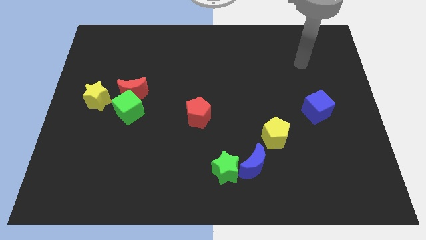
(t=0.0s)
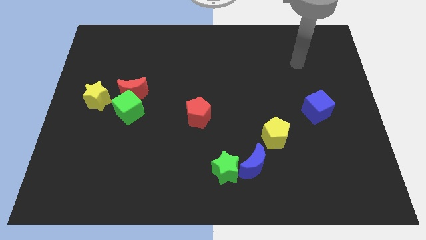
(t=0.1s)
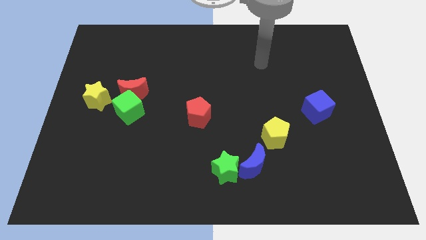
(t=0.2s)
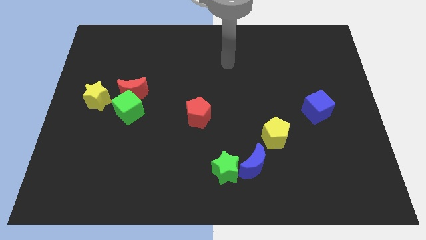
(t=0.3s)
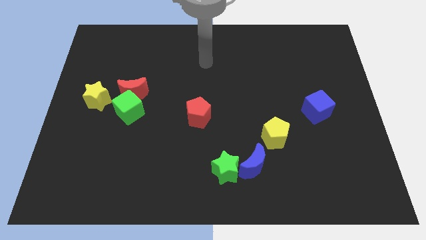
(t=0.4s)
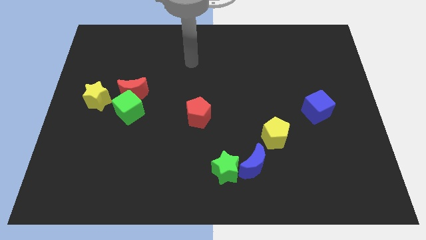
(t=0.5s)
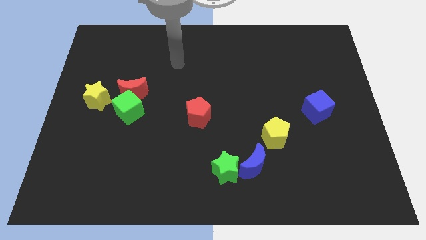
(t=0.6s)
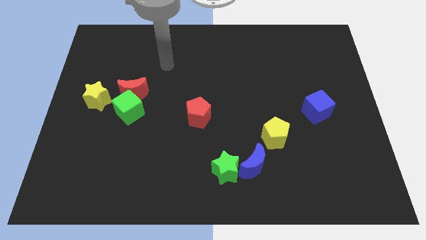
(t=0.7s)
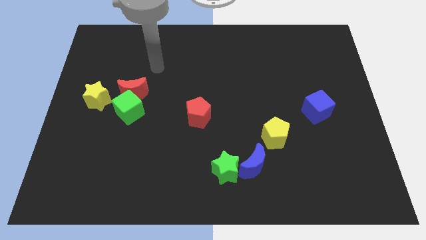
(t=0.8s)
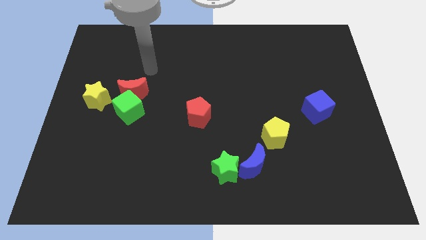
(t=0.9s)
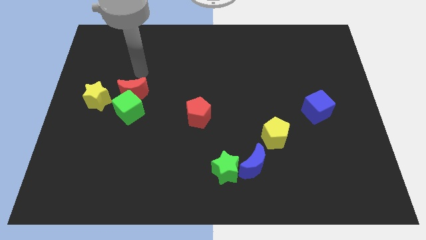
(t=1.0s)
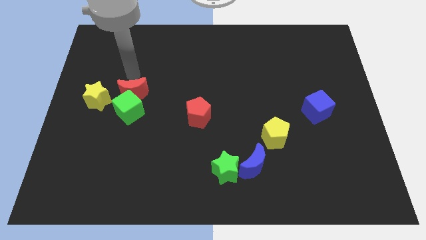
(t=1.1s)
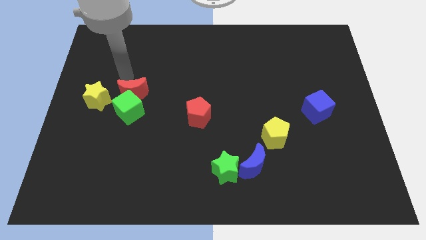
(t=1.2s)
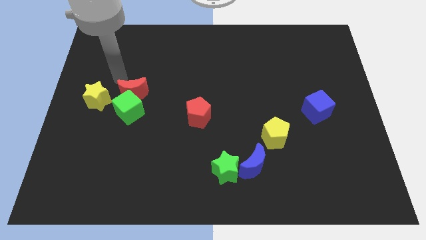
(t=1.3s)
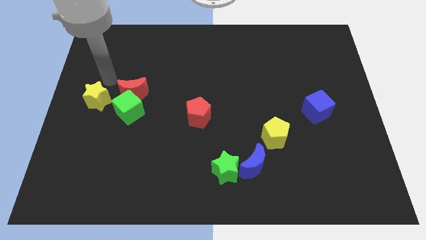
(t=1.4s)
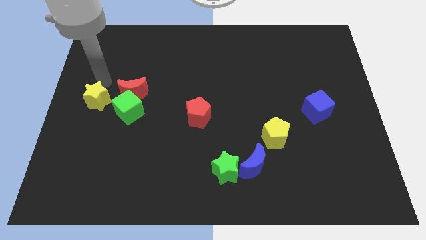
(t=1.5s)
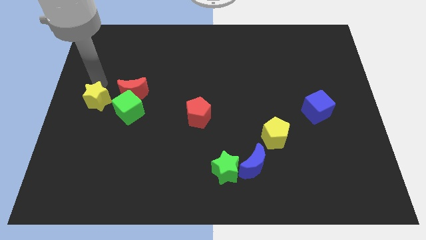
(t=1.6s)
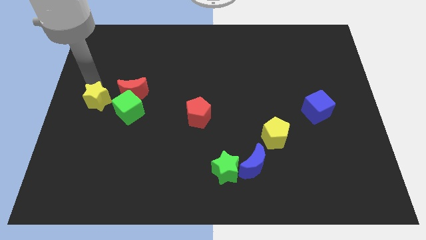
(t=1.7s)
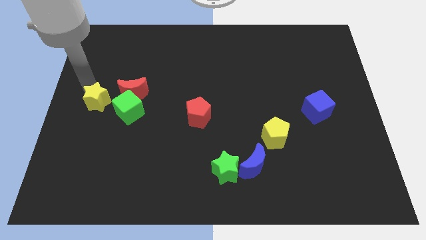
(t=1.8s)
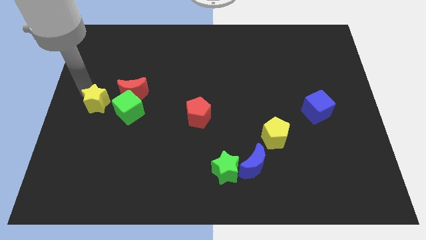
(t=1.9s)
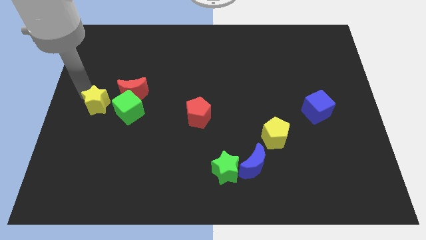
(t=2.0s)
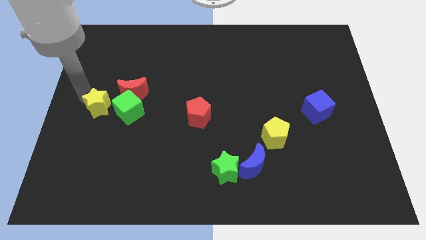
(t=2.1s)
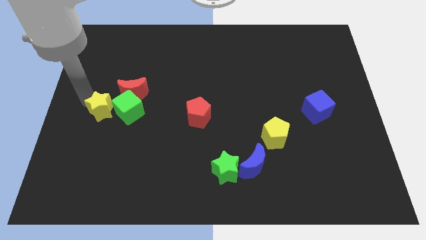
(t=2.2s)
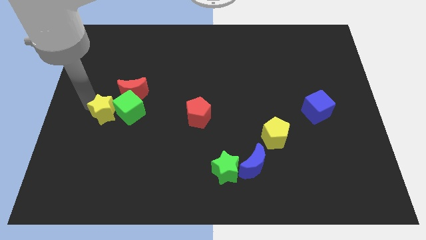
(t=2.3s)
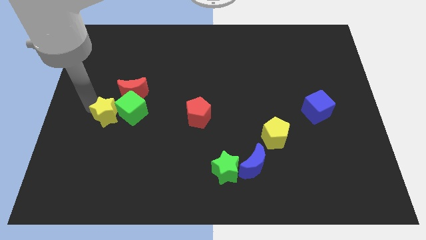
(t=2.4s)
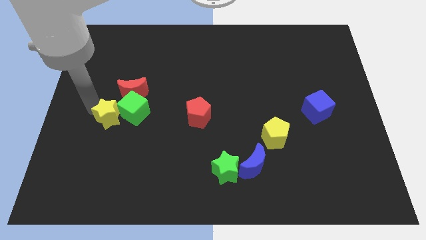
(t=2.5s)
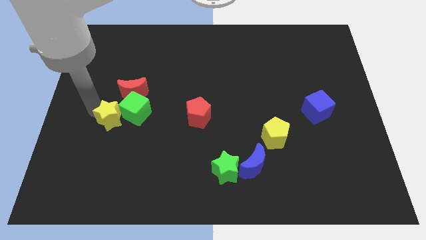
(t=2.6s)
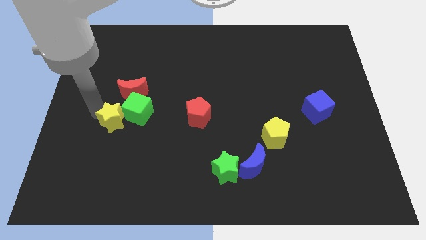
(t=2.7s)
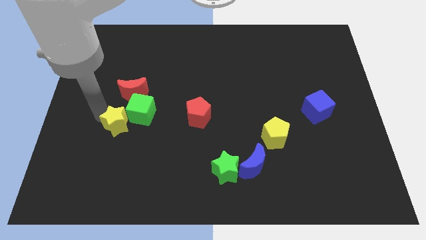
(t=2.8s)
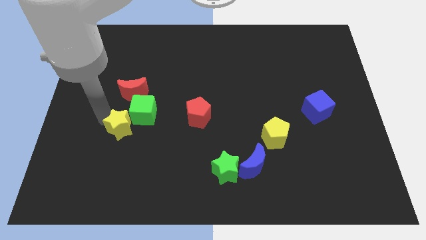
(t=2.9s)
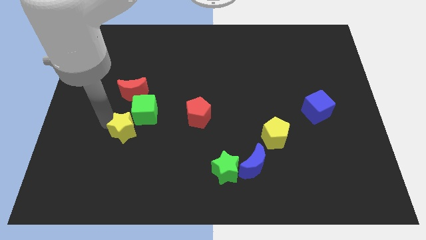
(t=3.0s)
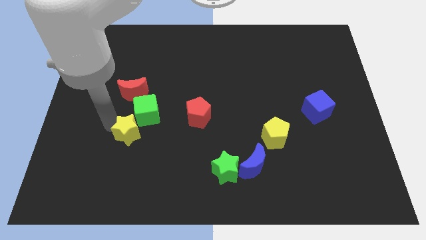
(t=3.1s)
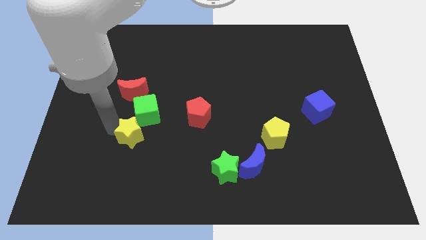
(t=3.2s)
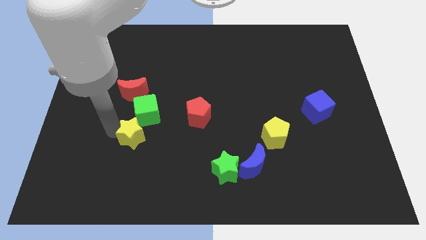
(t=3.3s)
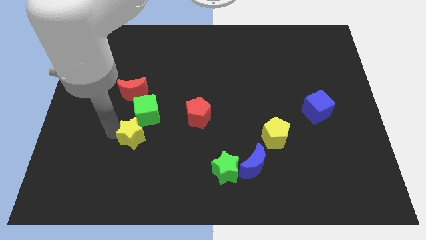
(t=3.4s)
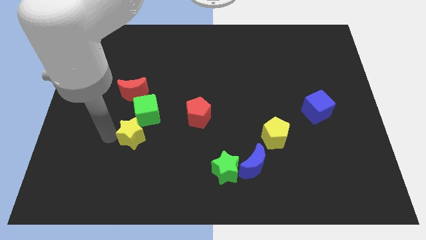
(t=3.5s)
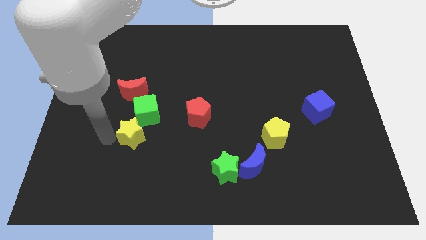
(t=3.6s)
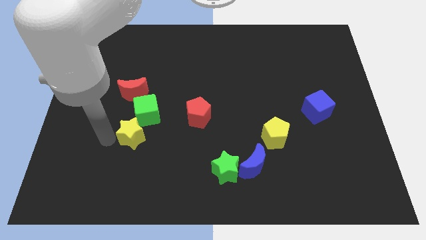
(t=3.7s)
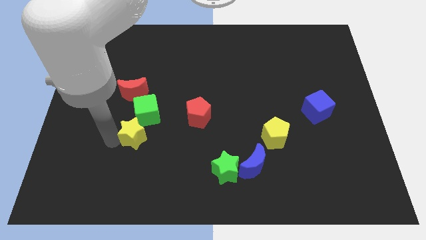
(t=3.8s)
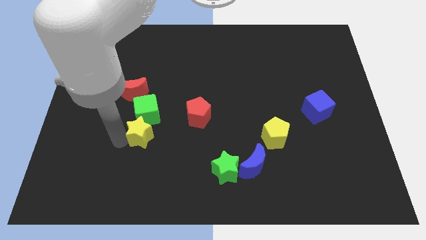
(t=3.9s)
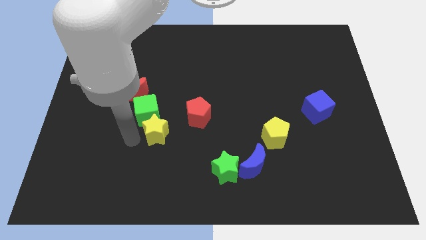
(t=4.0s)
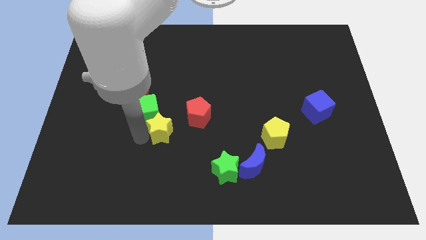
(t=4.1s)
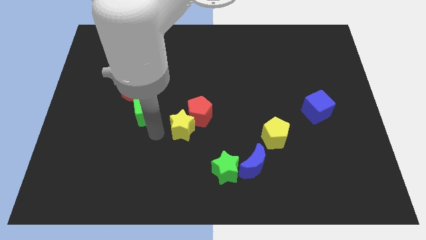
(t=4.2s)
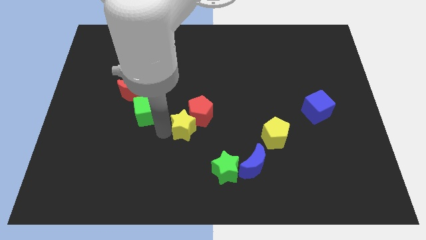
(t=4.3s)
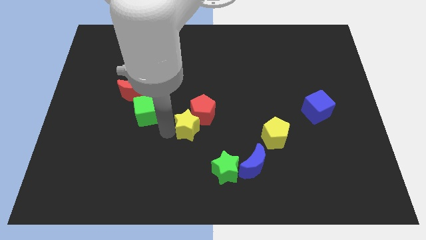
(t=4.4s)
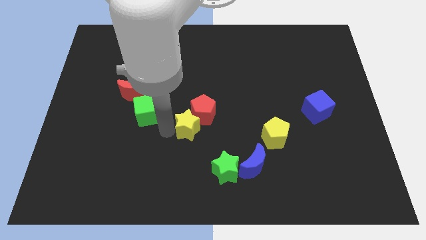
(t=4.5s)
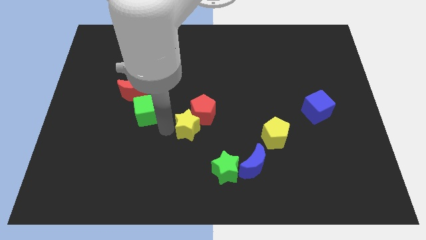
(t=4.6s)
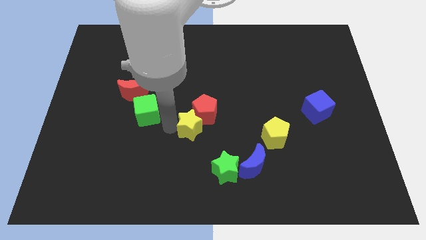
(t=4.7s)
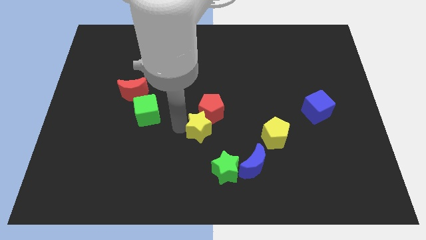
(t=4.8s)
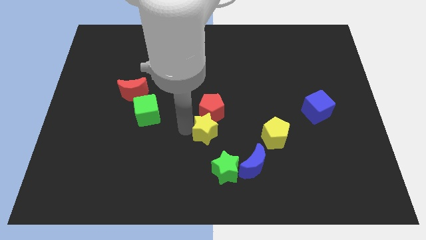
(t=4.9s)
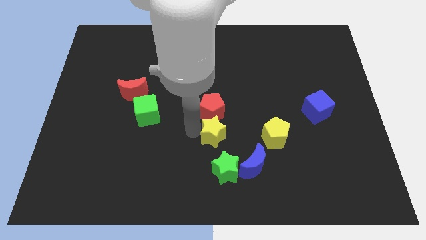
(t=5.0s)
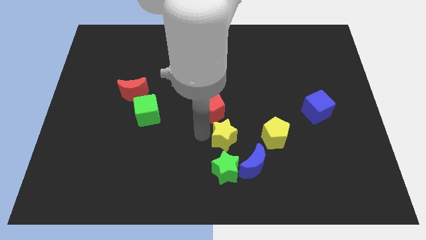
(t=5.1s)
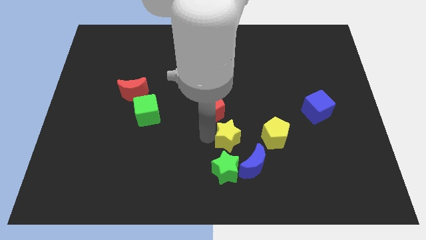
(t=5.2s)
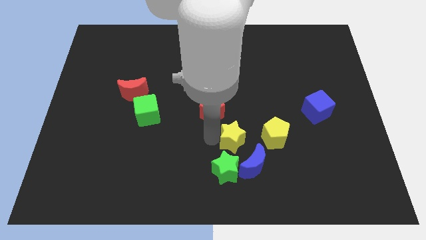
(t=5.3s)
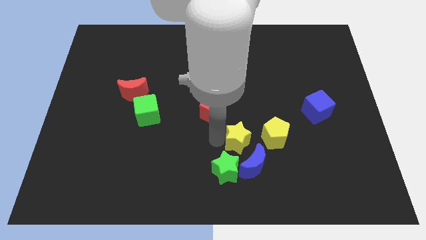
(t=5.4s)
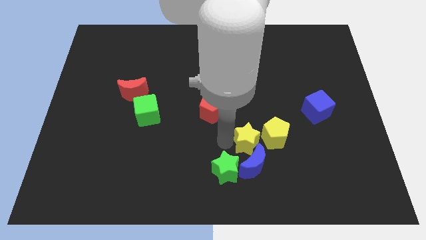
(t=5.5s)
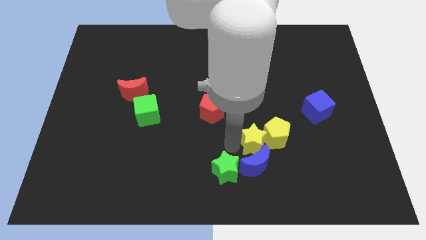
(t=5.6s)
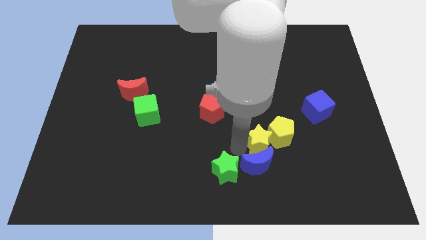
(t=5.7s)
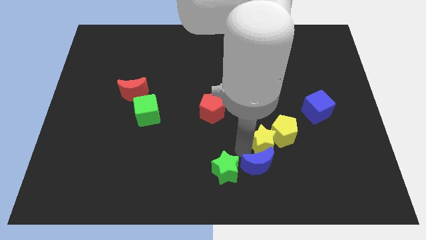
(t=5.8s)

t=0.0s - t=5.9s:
push the yellow star to the yellow pentagon

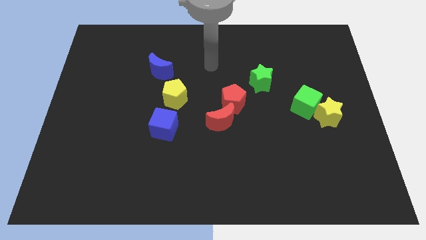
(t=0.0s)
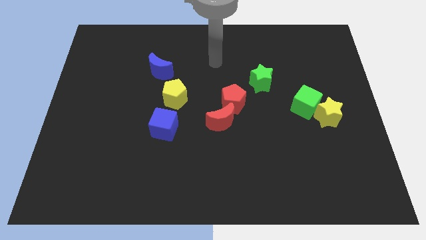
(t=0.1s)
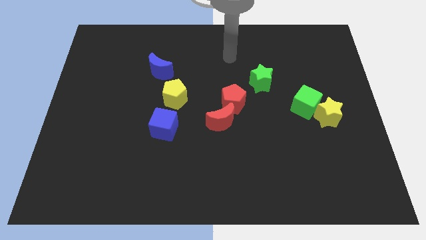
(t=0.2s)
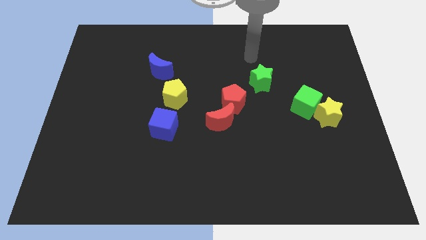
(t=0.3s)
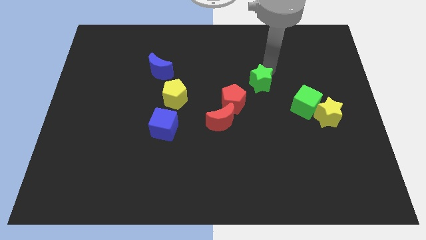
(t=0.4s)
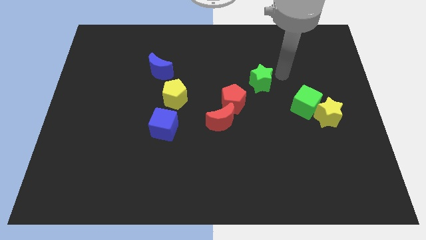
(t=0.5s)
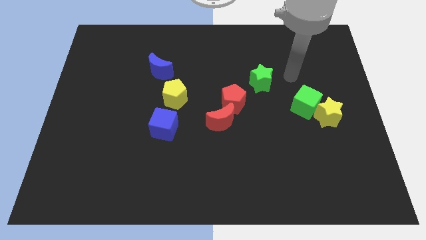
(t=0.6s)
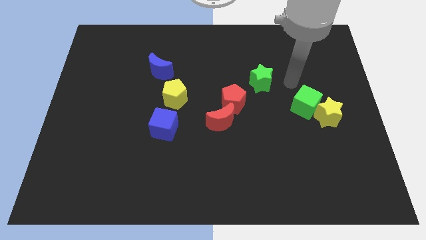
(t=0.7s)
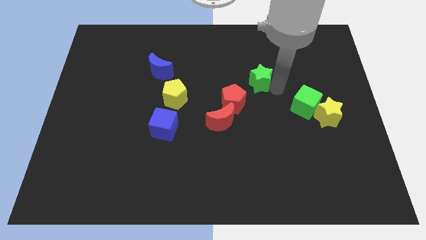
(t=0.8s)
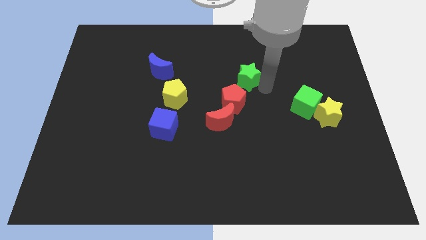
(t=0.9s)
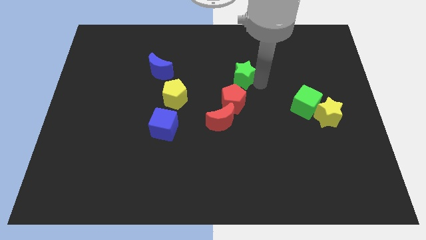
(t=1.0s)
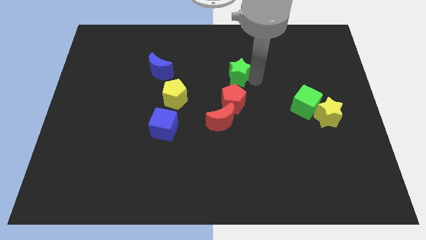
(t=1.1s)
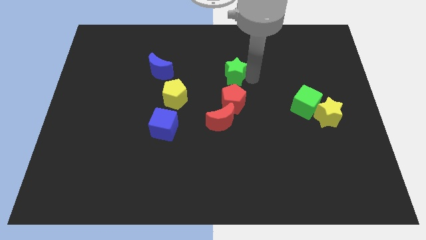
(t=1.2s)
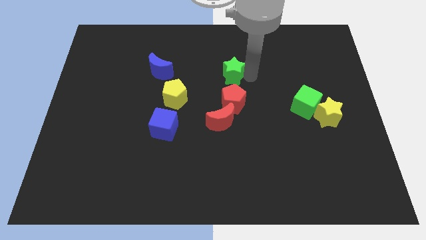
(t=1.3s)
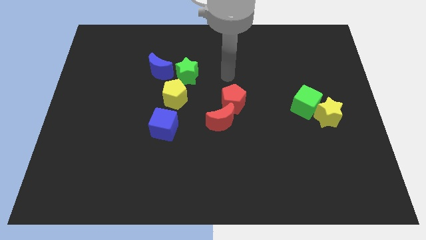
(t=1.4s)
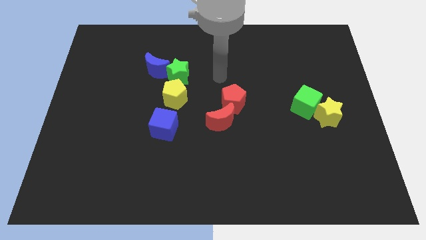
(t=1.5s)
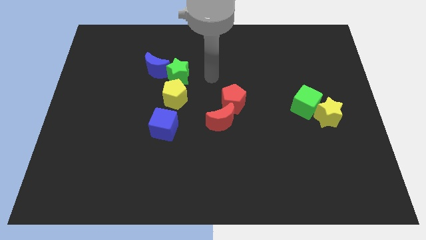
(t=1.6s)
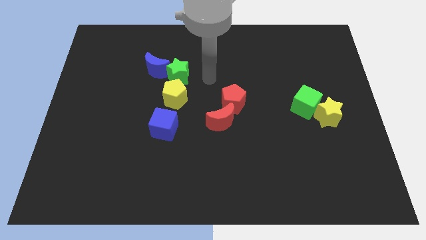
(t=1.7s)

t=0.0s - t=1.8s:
move the green star close to the blue moon

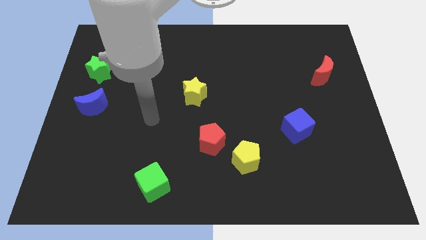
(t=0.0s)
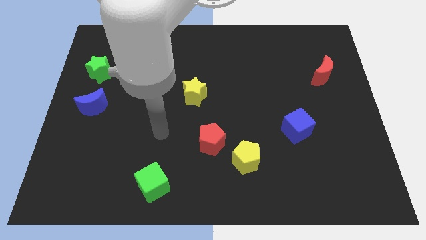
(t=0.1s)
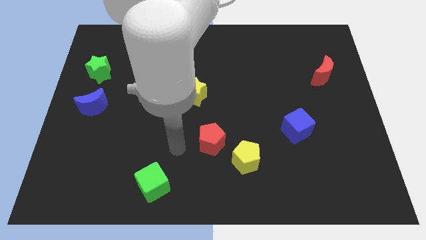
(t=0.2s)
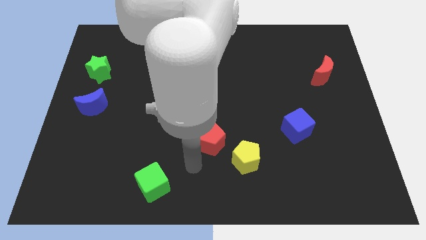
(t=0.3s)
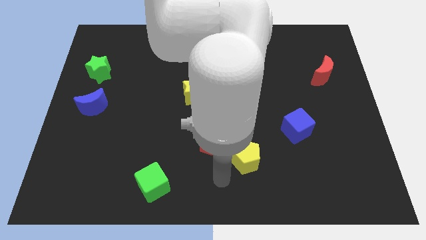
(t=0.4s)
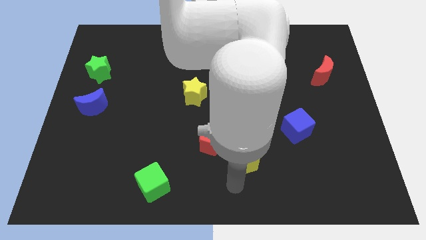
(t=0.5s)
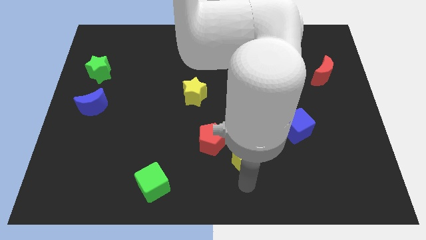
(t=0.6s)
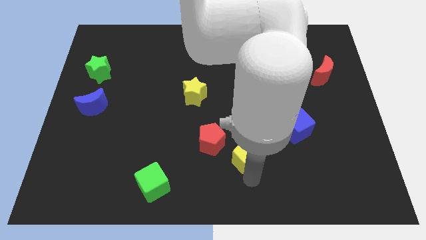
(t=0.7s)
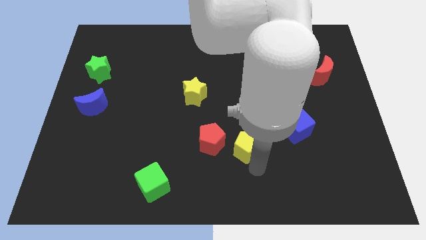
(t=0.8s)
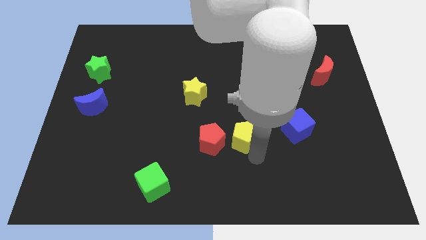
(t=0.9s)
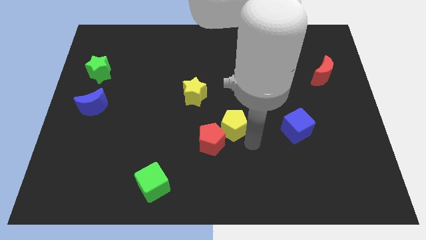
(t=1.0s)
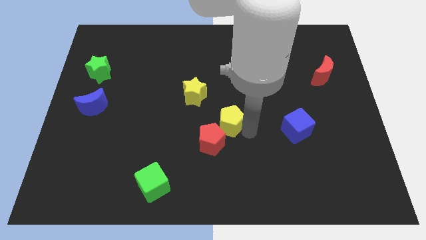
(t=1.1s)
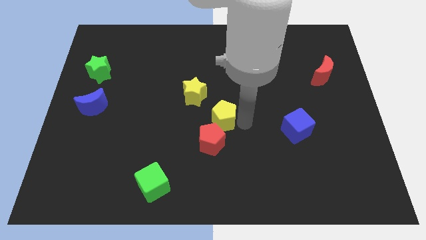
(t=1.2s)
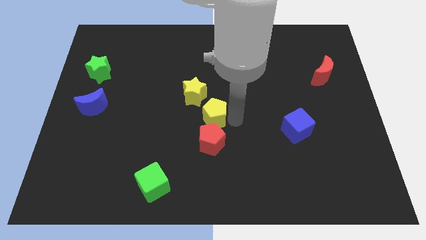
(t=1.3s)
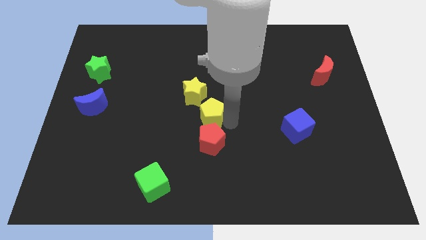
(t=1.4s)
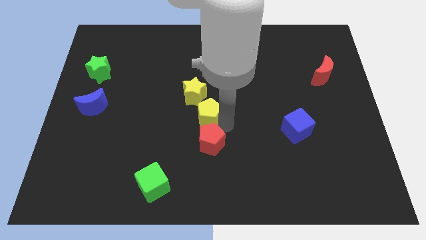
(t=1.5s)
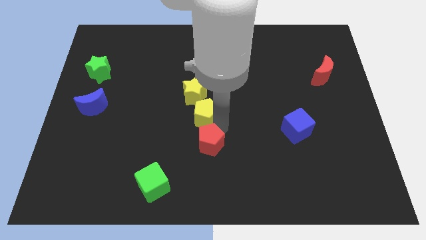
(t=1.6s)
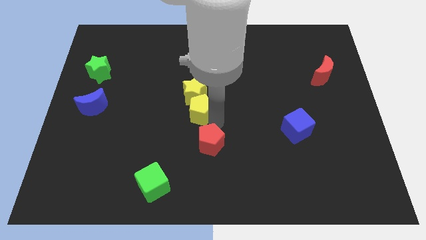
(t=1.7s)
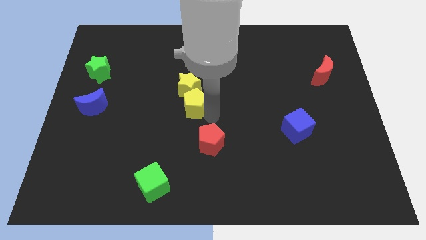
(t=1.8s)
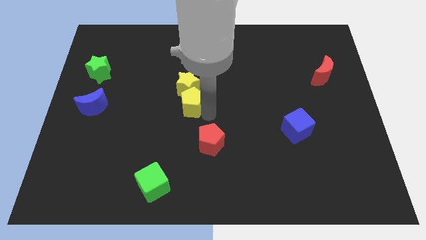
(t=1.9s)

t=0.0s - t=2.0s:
slide the yellow pentagon towards the yellow star
